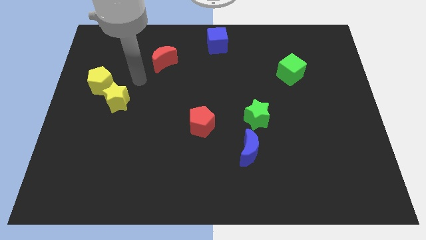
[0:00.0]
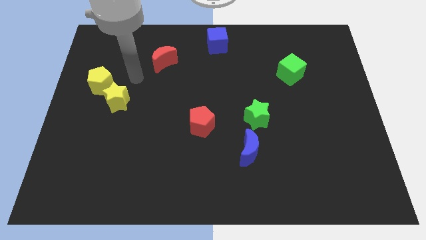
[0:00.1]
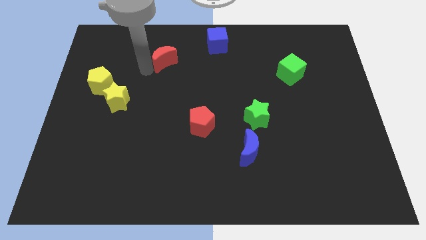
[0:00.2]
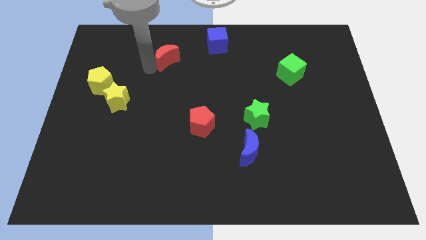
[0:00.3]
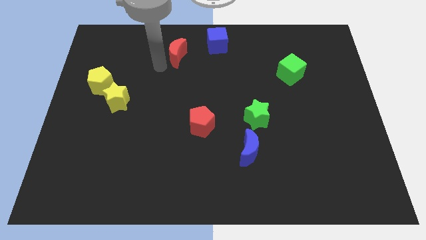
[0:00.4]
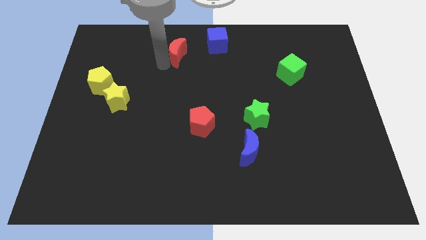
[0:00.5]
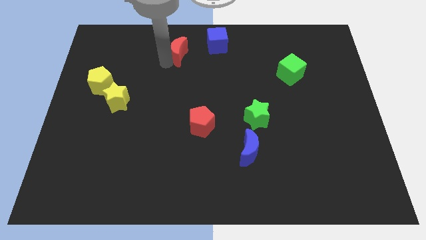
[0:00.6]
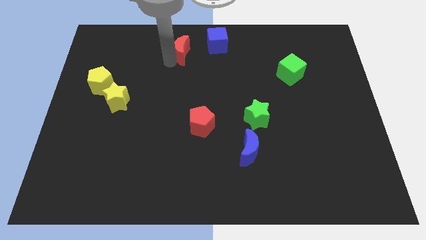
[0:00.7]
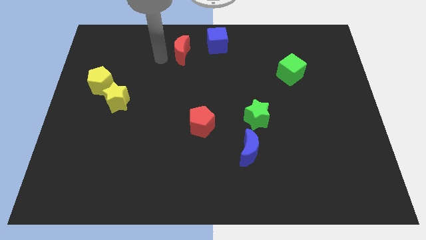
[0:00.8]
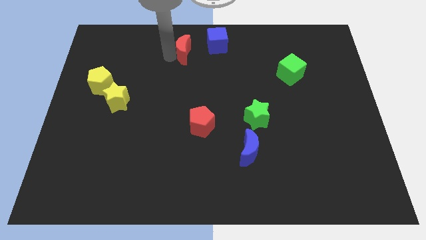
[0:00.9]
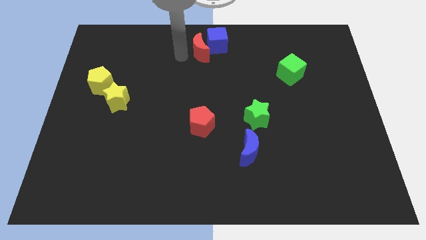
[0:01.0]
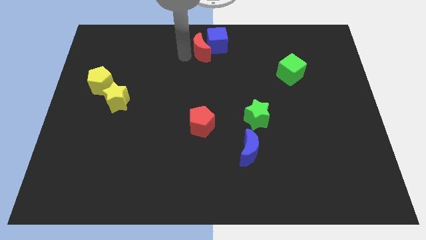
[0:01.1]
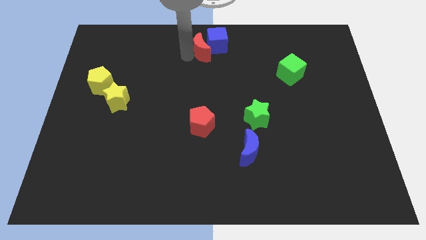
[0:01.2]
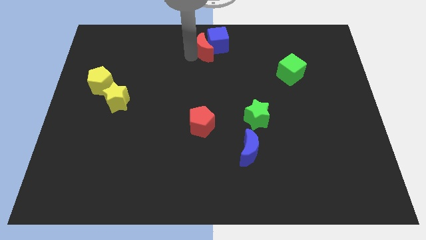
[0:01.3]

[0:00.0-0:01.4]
push the red crescent into the blue cube

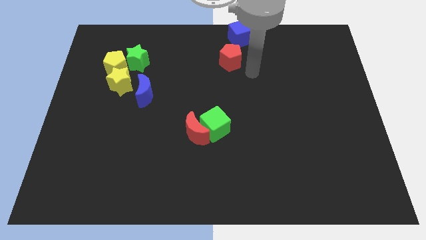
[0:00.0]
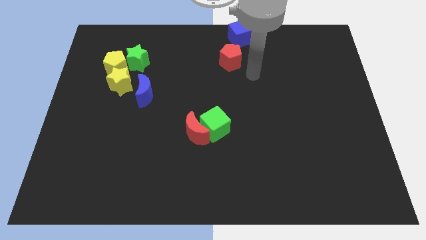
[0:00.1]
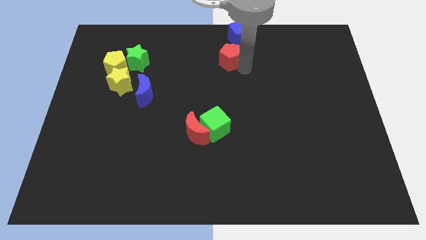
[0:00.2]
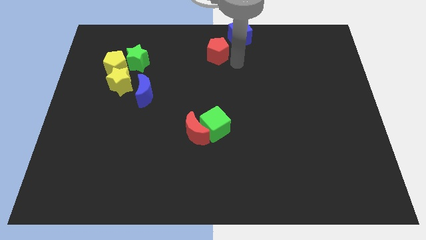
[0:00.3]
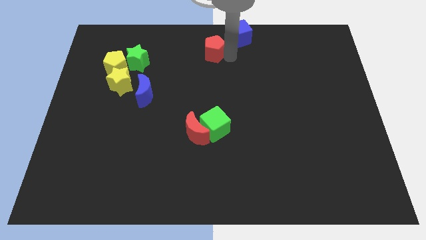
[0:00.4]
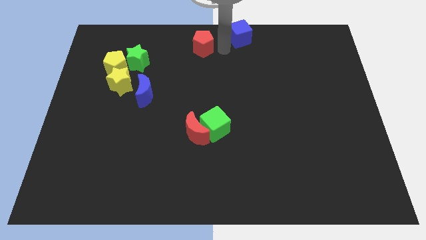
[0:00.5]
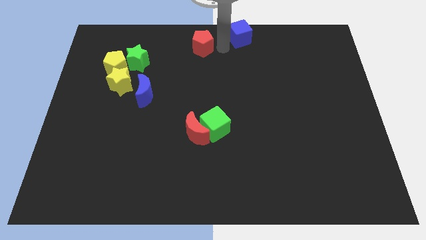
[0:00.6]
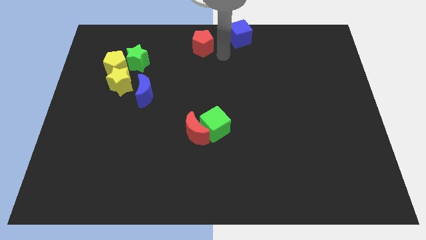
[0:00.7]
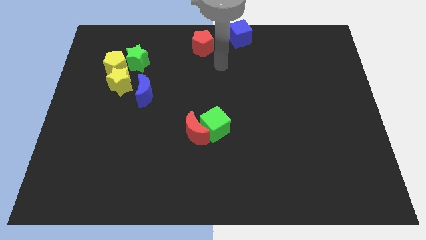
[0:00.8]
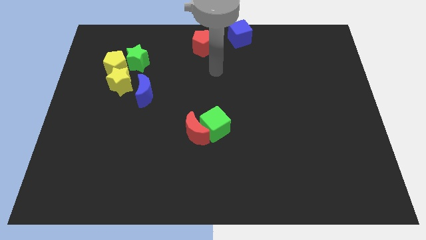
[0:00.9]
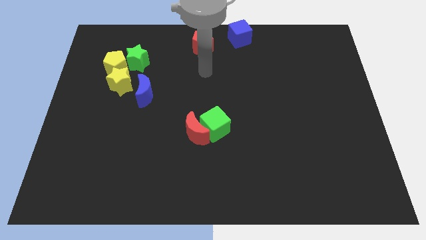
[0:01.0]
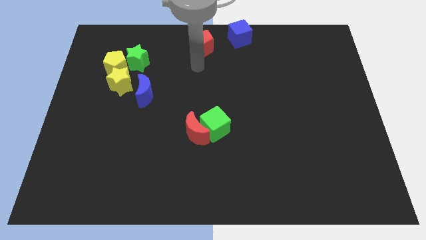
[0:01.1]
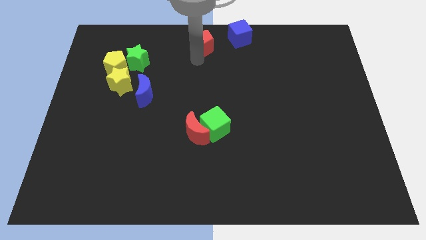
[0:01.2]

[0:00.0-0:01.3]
move the red pentagon to the left of the blue cube

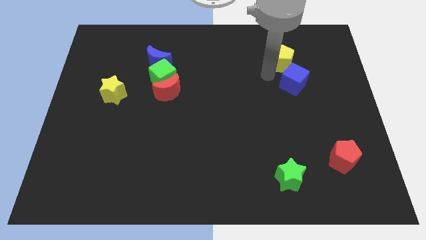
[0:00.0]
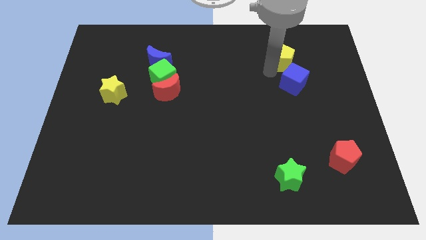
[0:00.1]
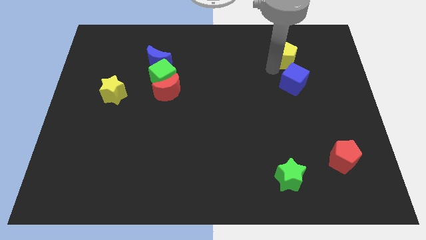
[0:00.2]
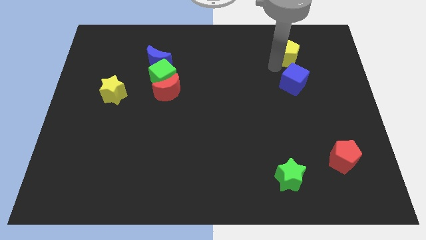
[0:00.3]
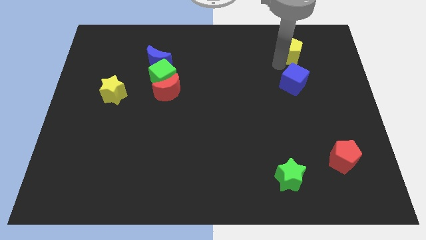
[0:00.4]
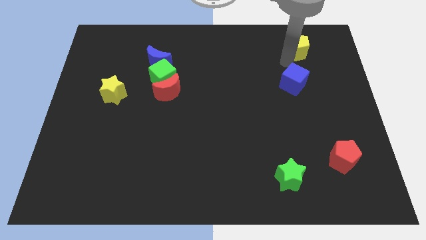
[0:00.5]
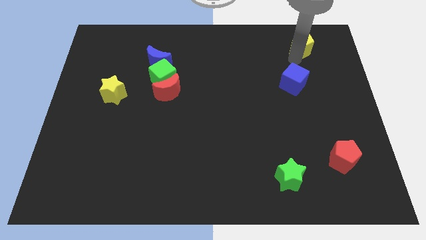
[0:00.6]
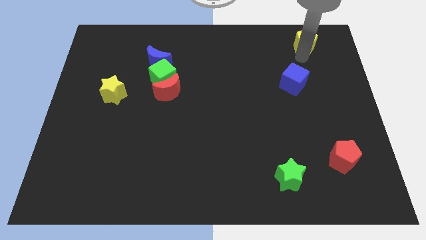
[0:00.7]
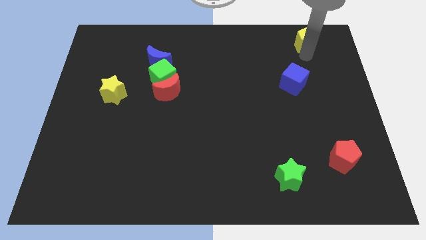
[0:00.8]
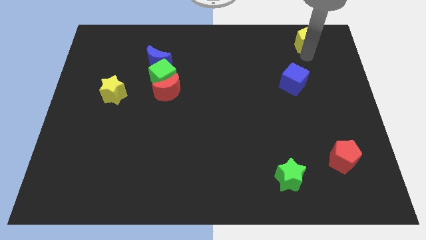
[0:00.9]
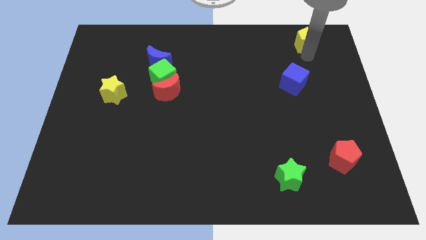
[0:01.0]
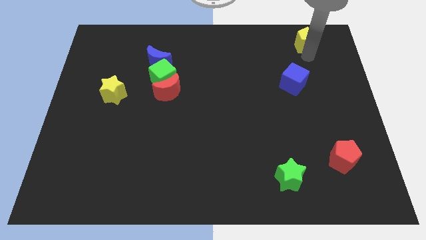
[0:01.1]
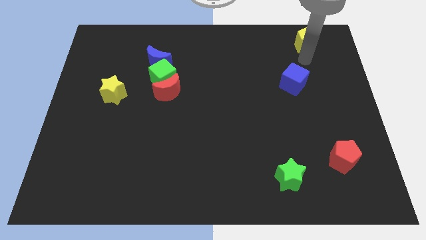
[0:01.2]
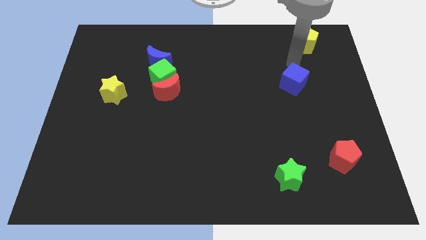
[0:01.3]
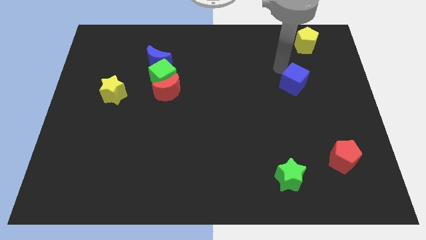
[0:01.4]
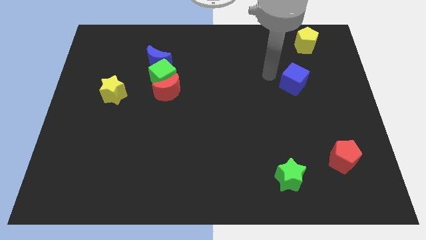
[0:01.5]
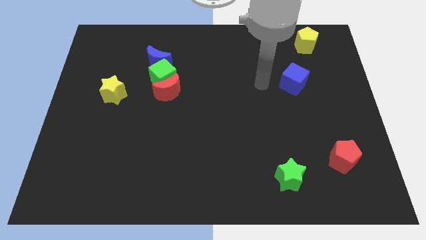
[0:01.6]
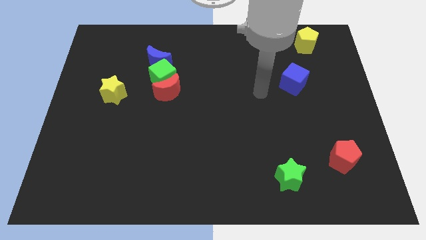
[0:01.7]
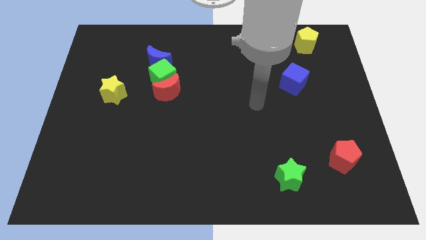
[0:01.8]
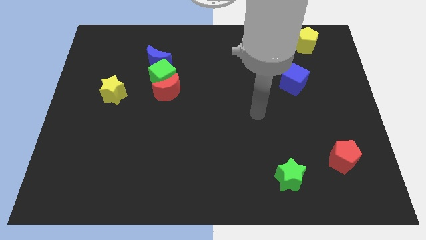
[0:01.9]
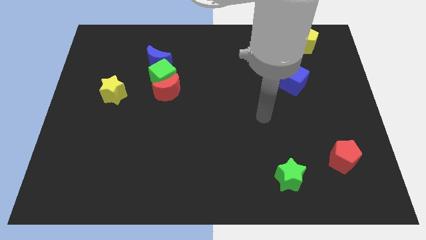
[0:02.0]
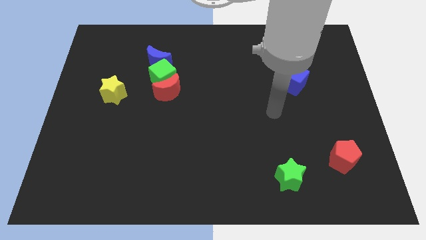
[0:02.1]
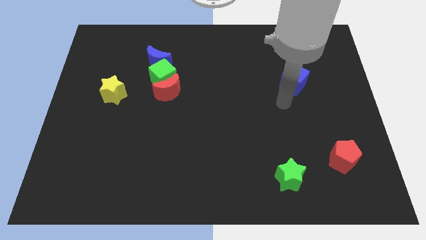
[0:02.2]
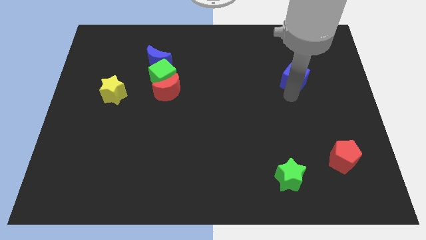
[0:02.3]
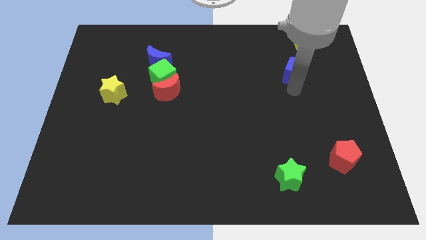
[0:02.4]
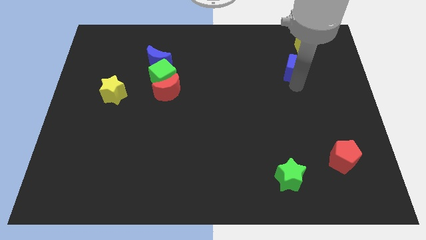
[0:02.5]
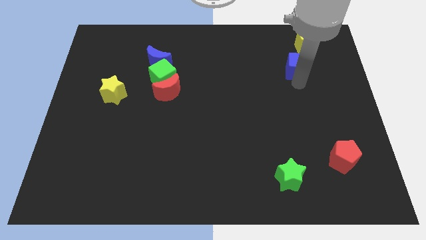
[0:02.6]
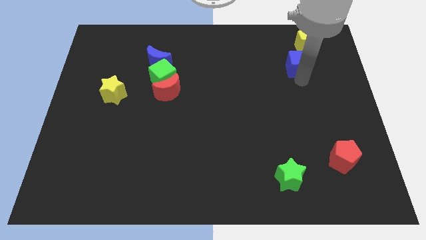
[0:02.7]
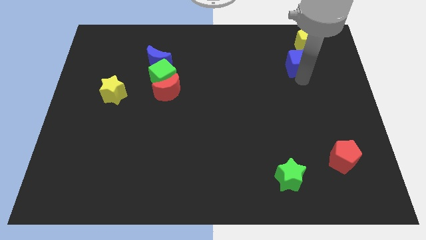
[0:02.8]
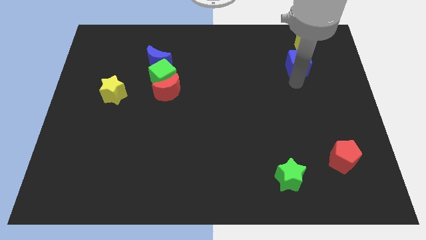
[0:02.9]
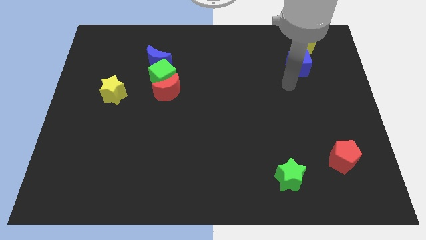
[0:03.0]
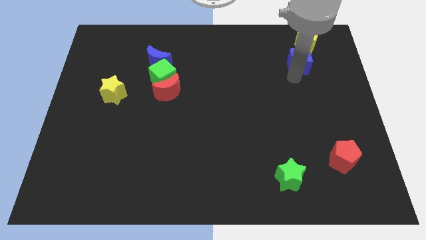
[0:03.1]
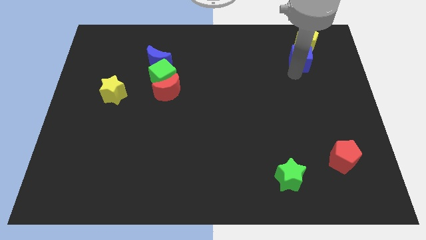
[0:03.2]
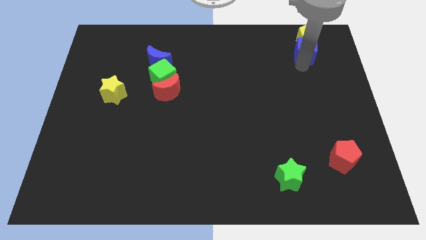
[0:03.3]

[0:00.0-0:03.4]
push the blue cube and yellow pentagon to the top right

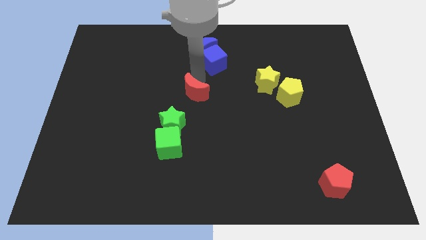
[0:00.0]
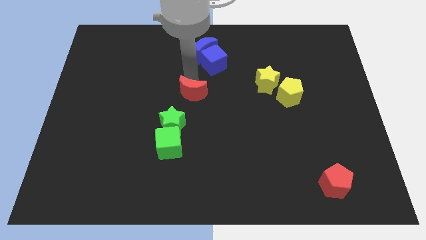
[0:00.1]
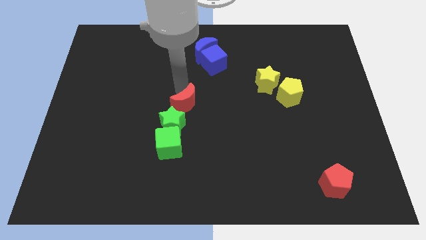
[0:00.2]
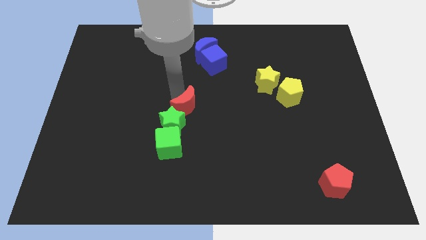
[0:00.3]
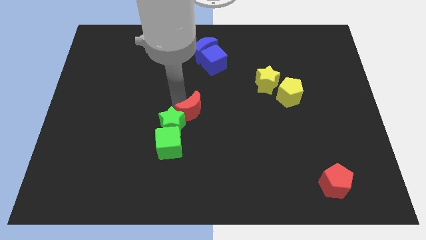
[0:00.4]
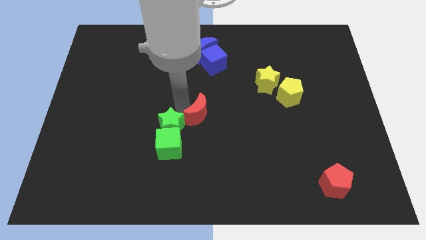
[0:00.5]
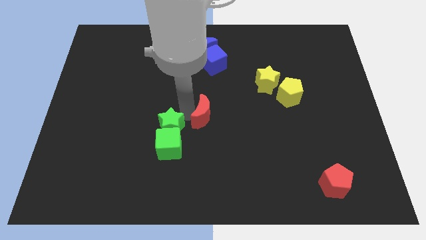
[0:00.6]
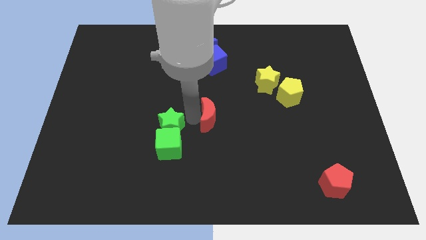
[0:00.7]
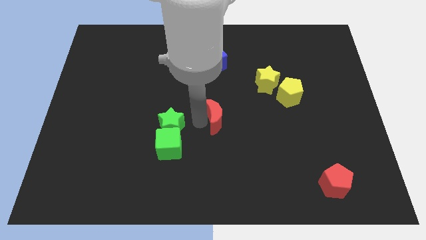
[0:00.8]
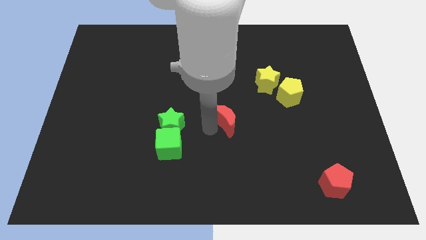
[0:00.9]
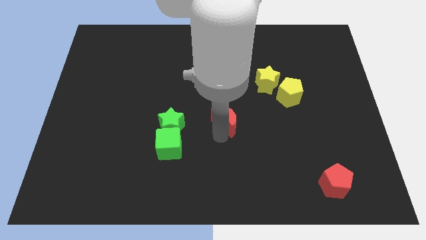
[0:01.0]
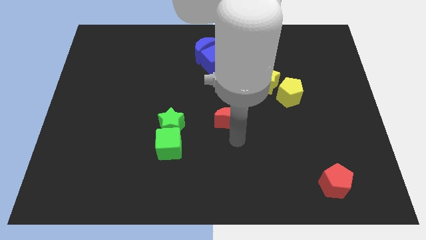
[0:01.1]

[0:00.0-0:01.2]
push the red crescent to the center of the board

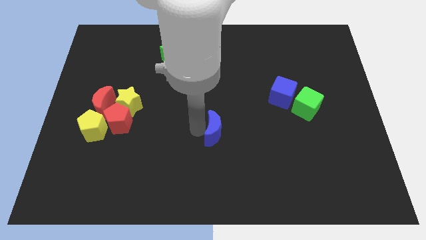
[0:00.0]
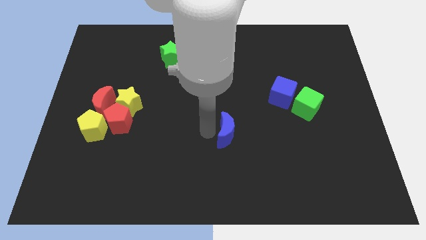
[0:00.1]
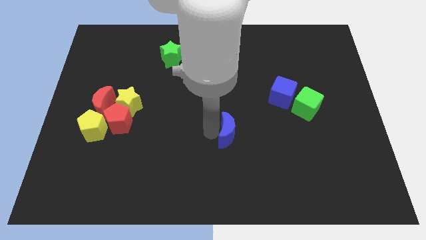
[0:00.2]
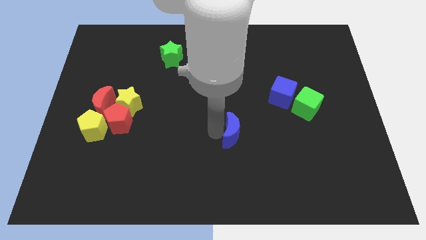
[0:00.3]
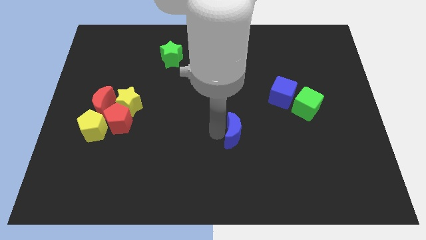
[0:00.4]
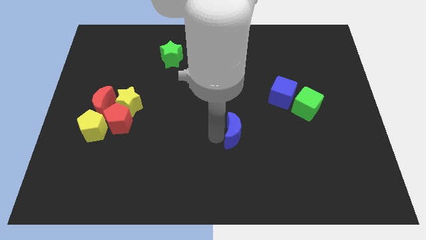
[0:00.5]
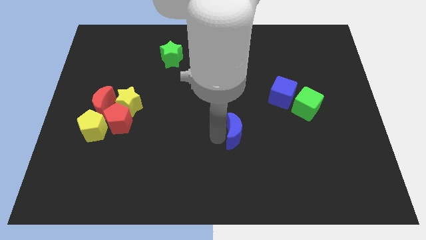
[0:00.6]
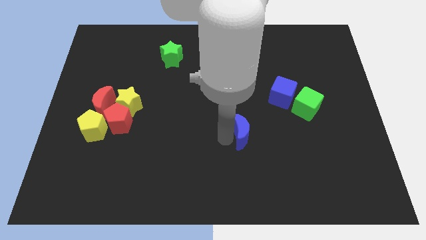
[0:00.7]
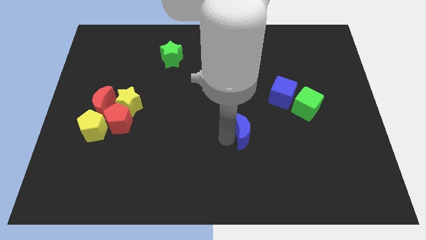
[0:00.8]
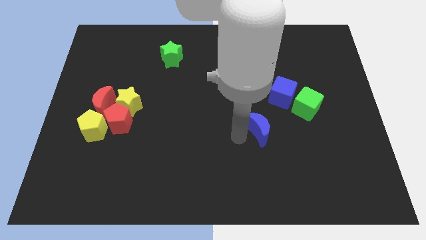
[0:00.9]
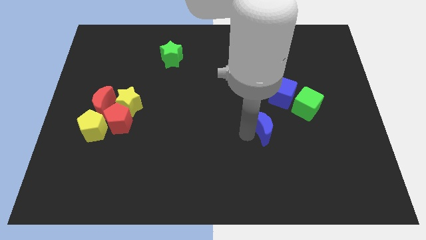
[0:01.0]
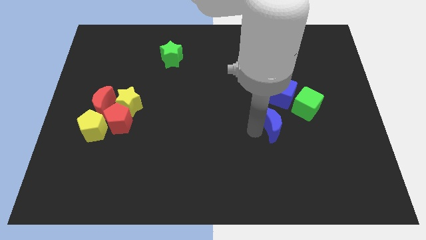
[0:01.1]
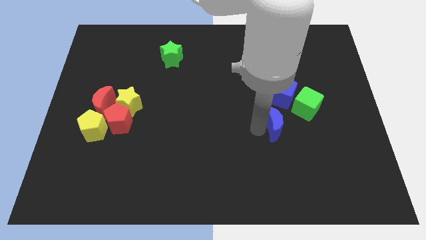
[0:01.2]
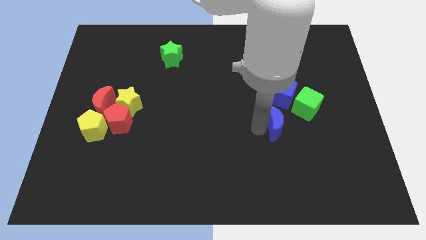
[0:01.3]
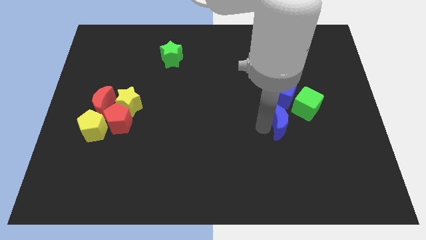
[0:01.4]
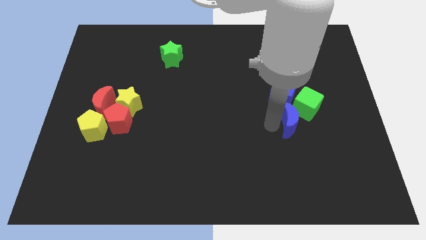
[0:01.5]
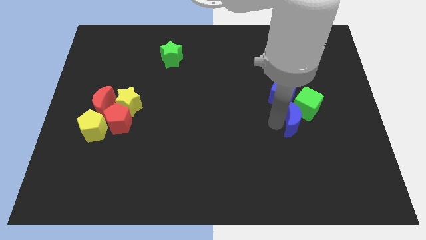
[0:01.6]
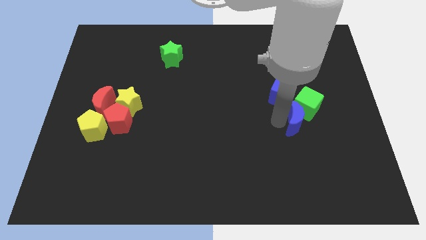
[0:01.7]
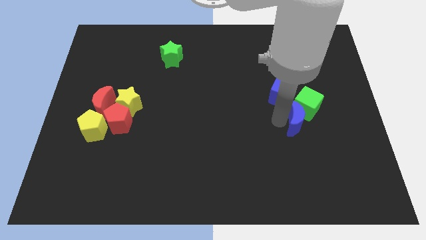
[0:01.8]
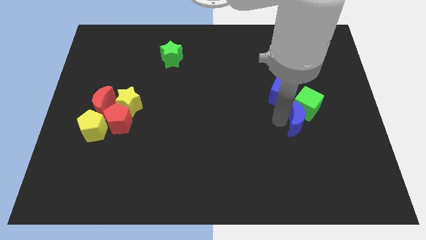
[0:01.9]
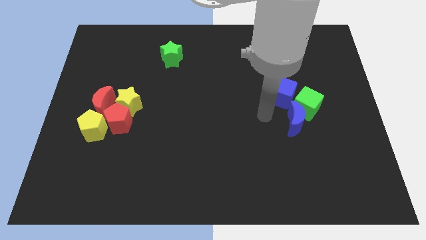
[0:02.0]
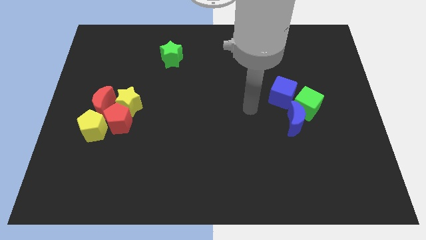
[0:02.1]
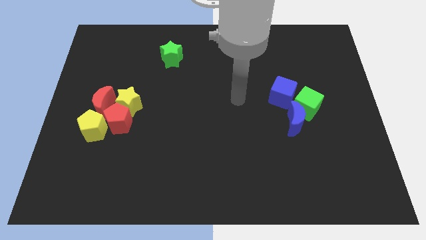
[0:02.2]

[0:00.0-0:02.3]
place the bleu moon diagonal below green cube
